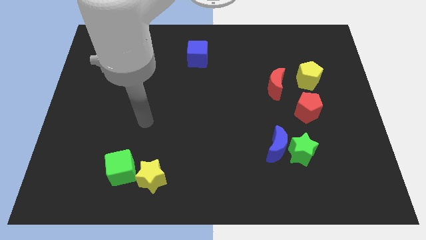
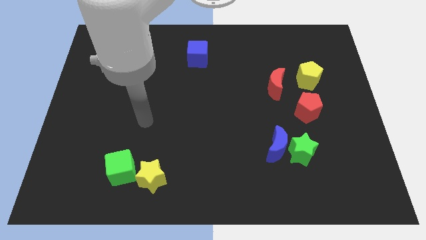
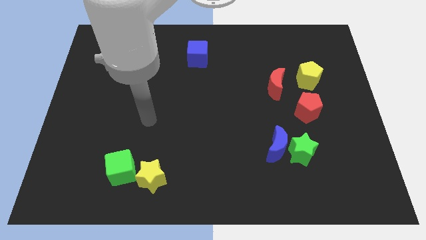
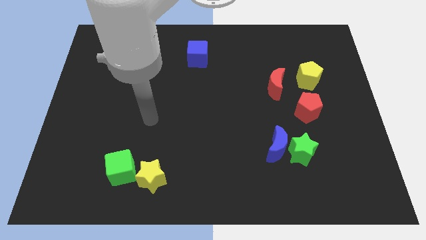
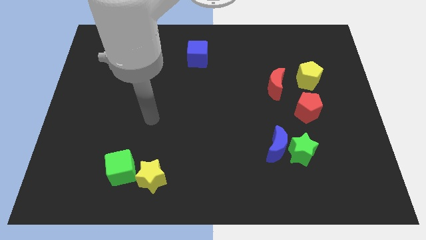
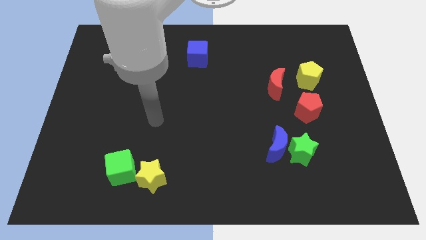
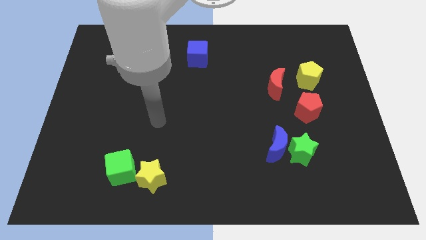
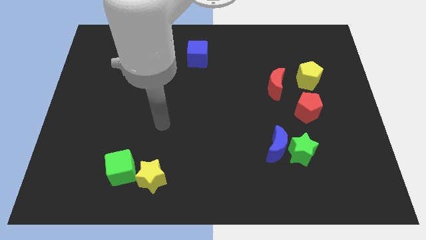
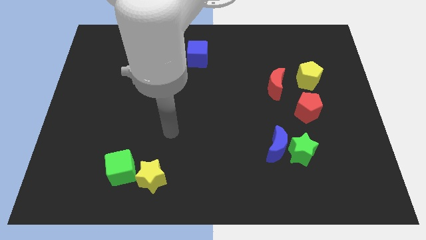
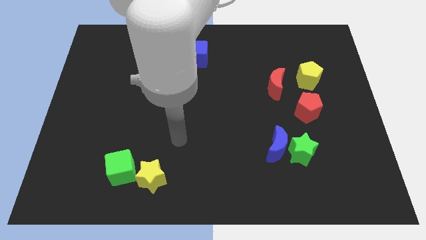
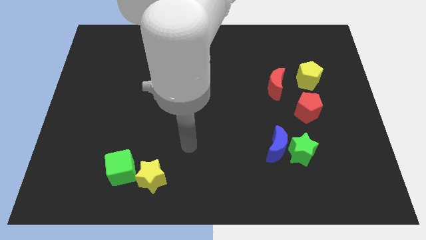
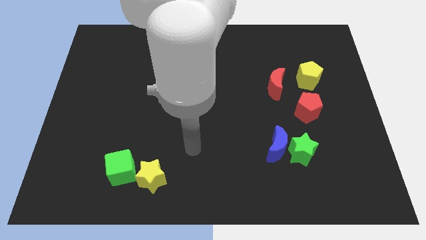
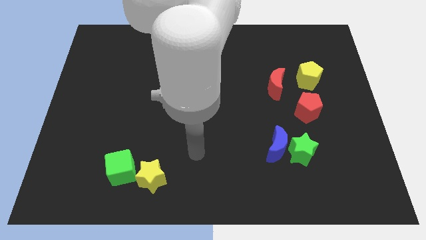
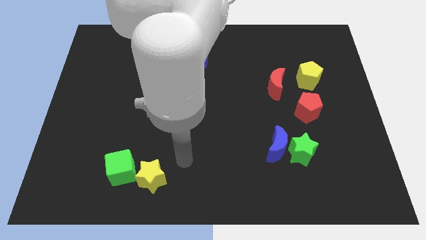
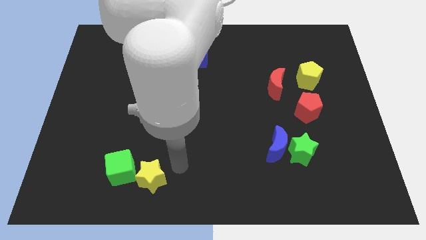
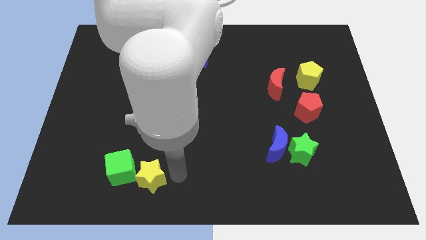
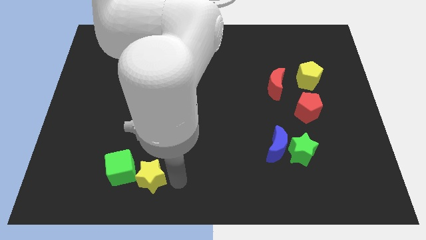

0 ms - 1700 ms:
move your hand to the left of the yellow star

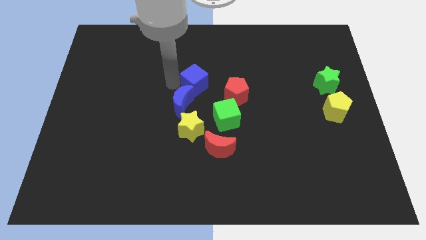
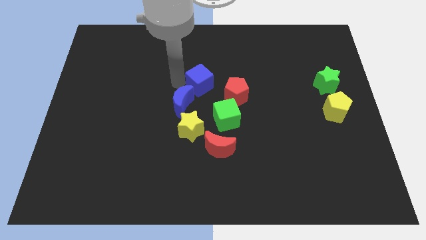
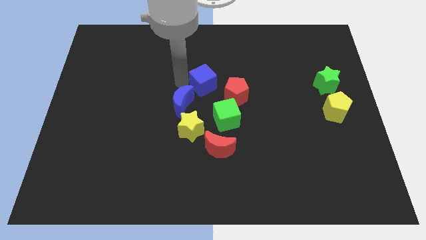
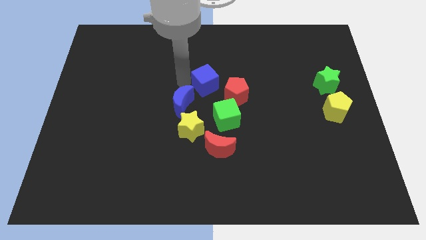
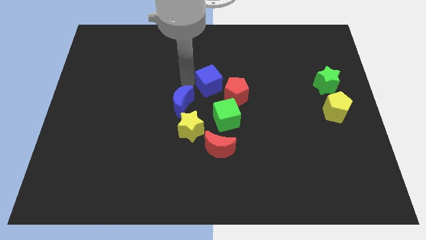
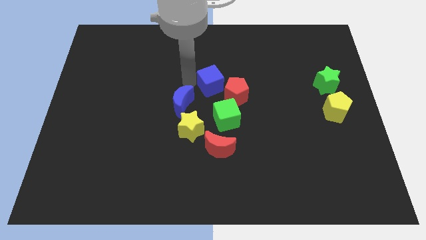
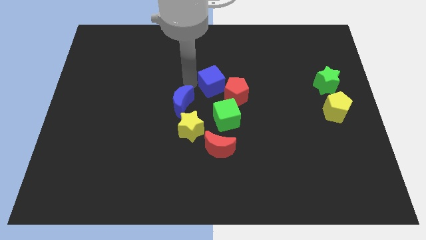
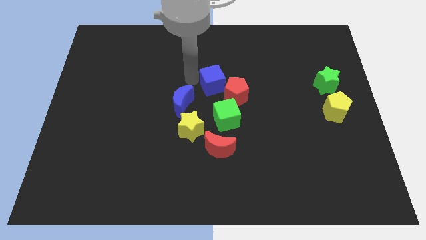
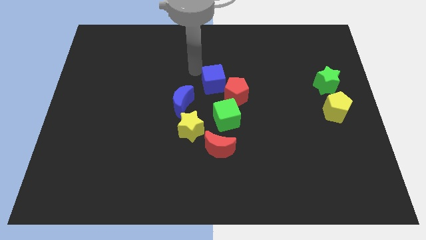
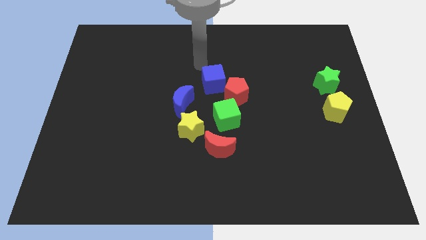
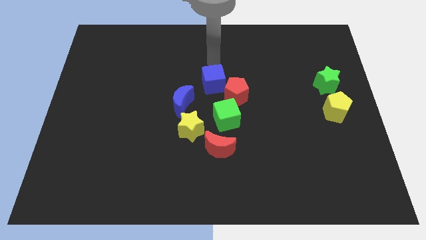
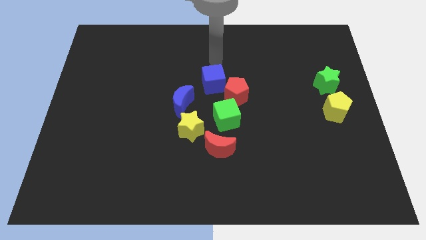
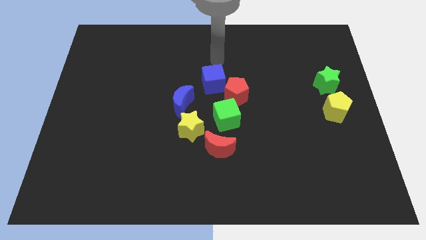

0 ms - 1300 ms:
push the blue cube above the red pentagon

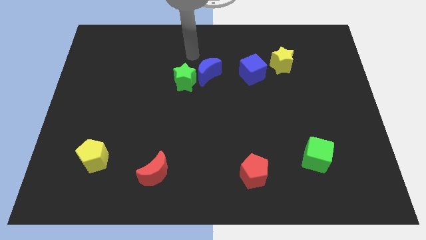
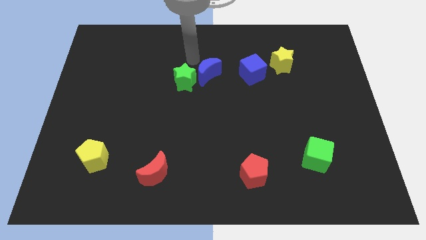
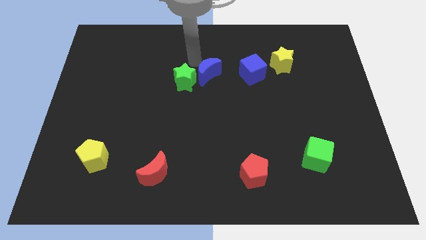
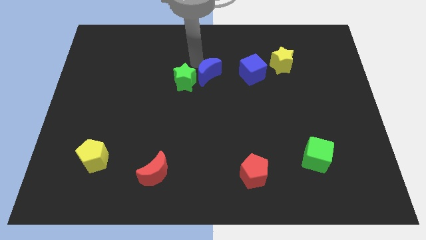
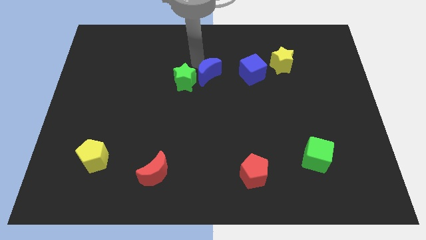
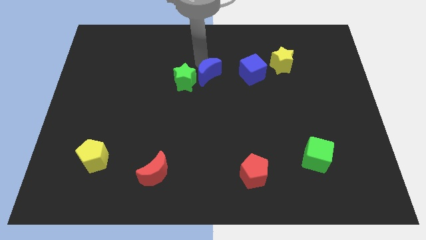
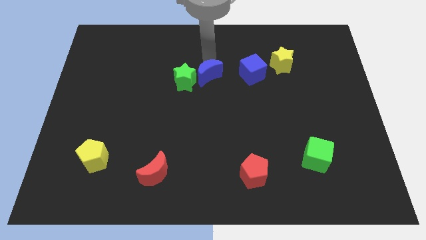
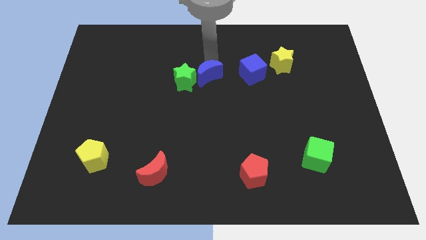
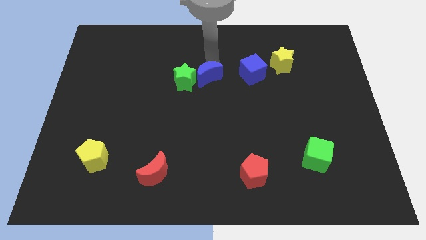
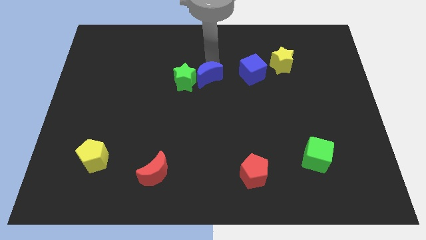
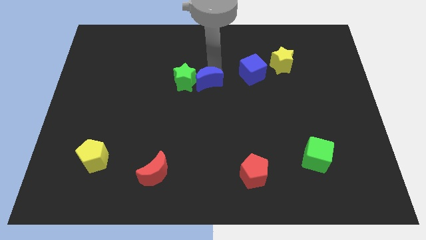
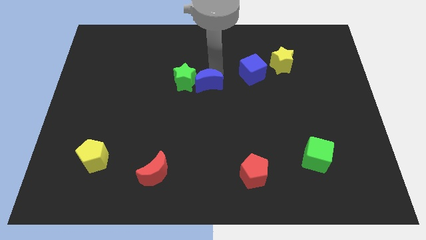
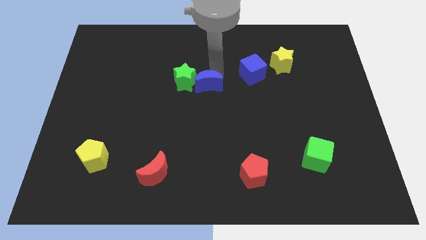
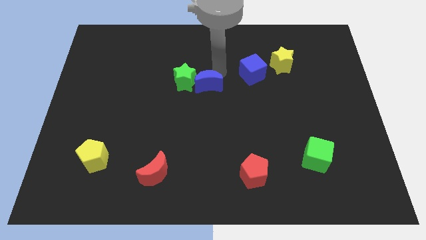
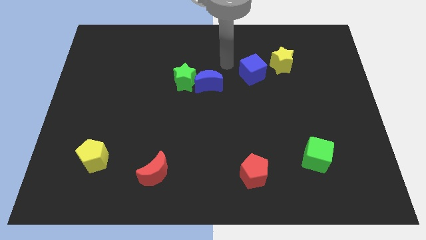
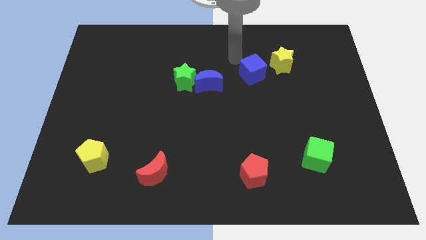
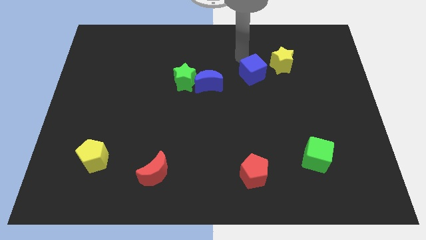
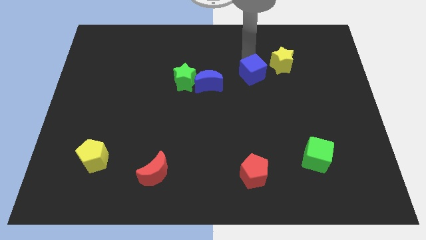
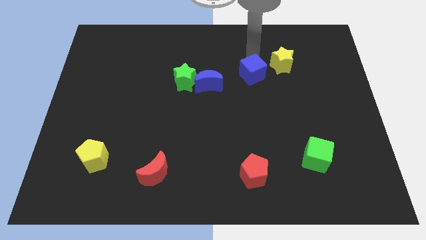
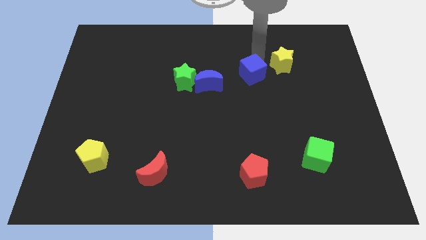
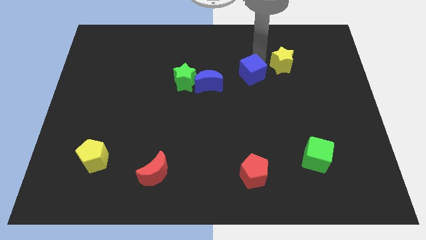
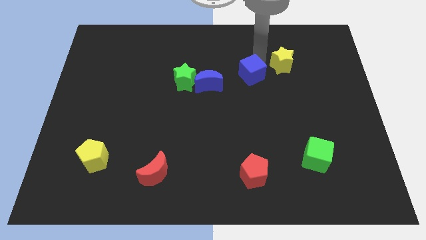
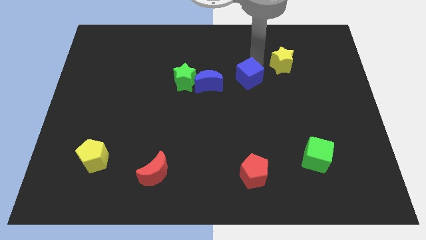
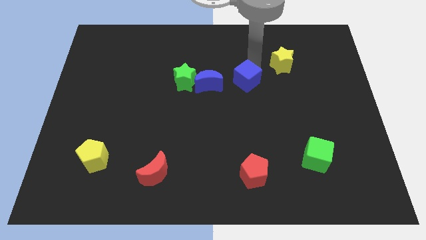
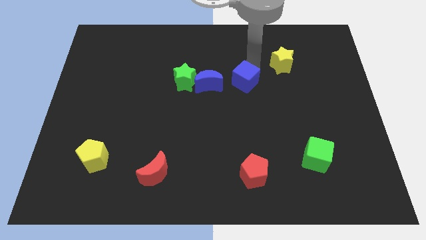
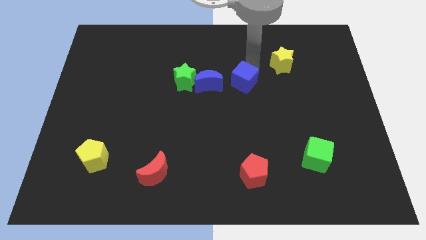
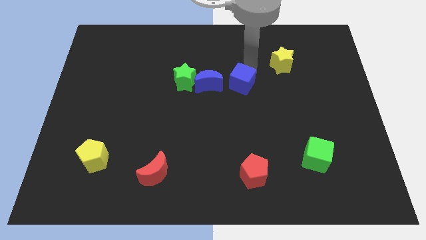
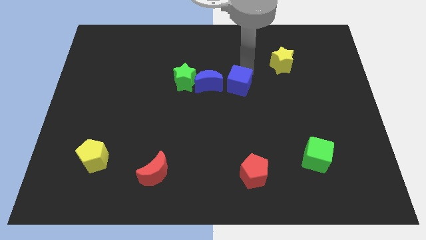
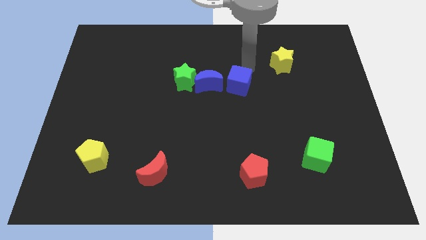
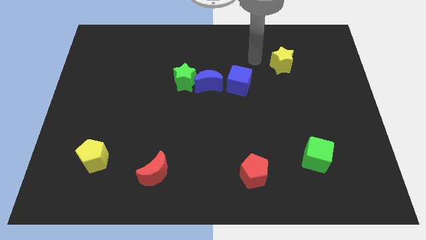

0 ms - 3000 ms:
push blue cube beside blue crescent

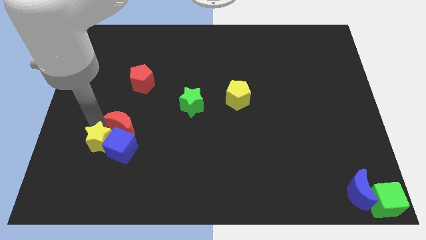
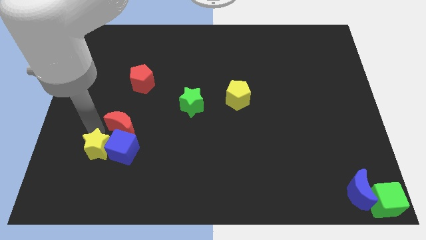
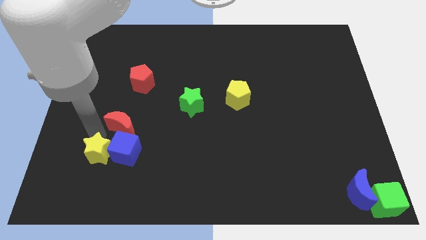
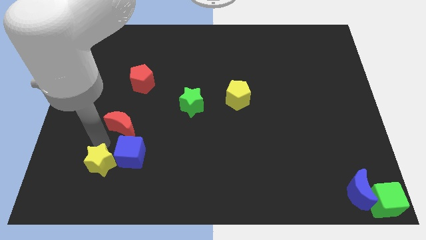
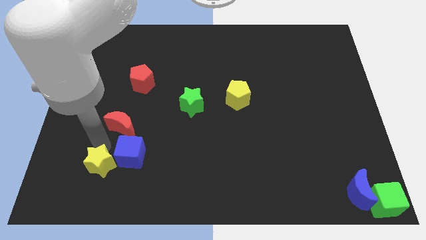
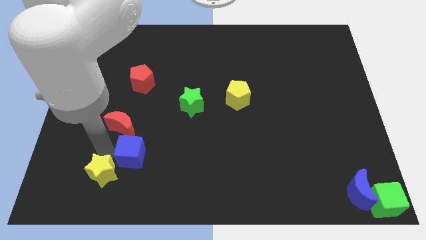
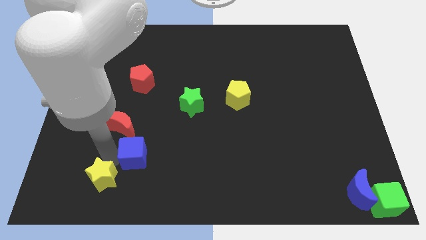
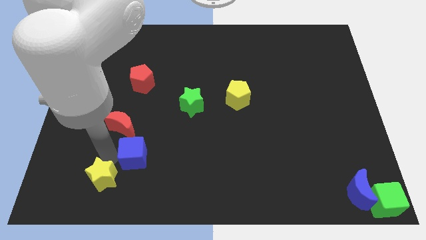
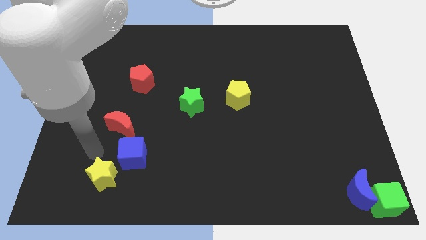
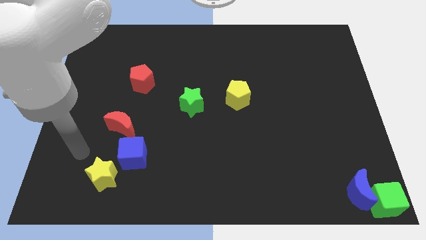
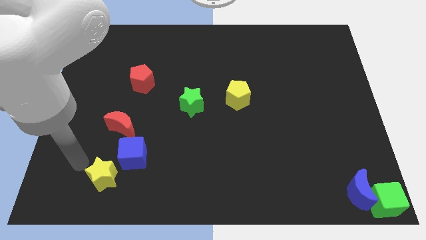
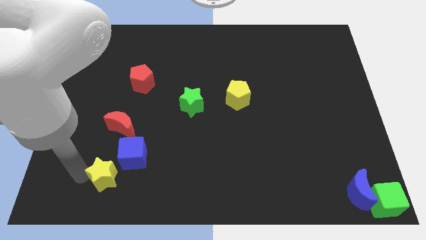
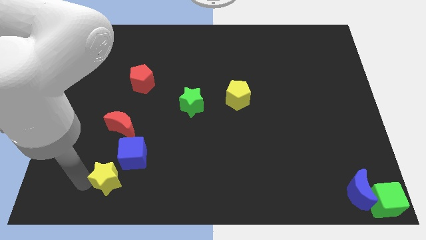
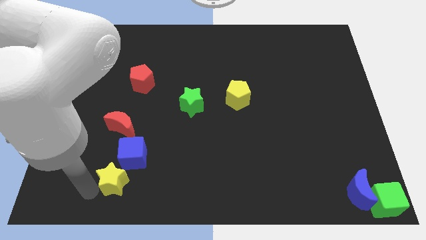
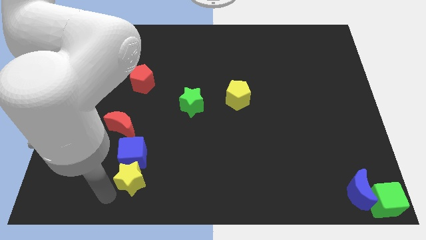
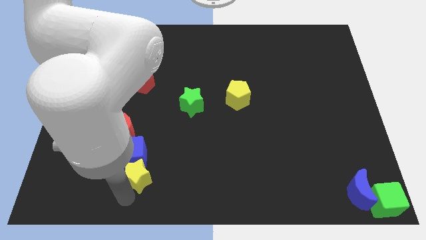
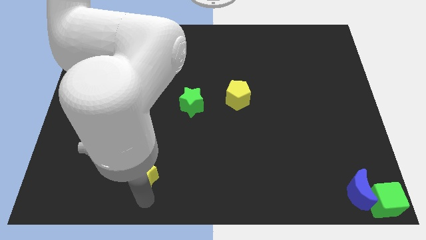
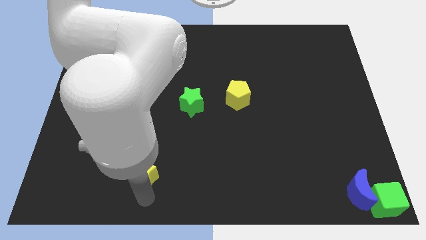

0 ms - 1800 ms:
push yellow star to bottom of the board

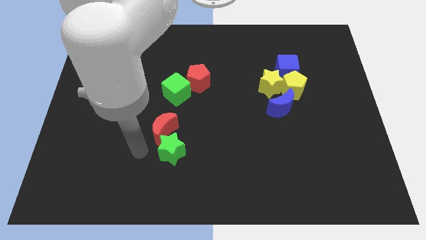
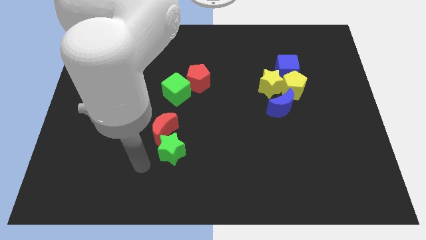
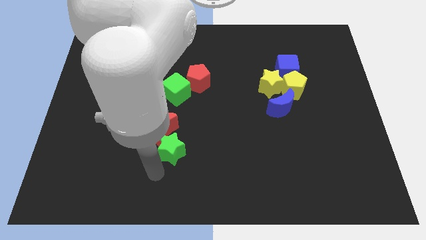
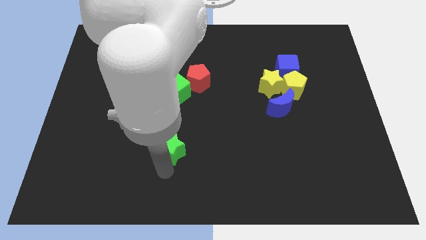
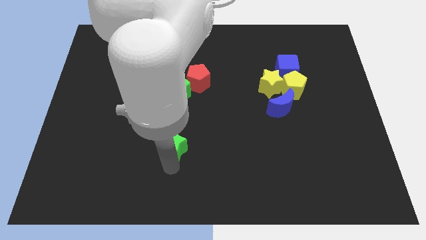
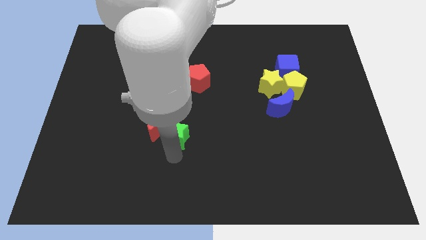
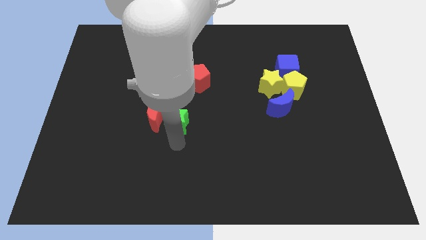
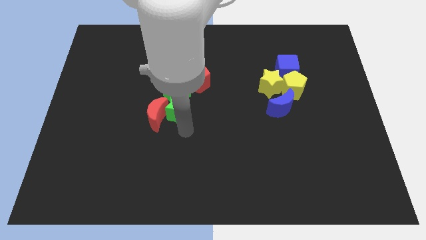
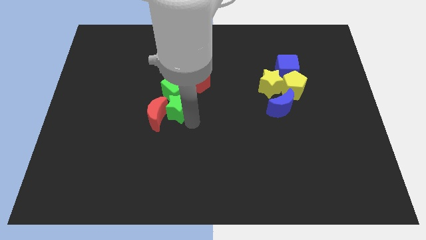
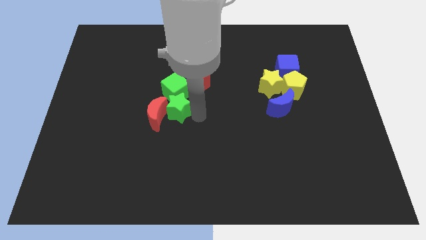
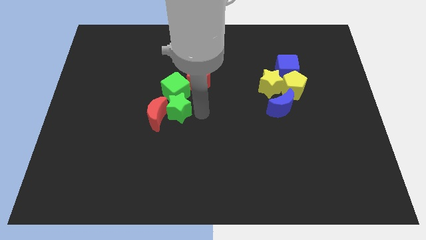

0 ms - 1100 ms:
put the green star at the bottom of the green cube

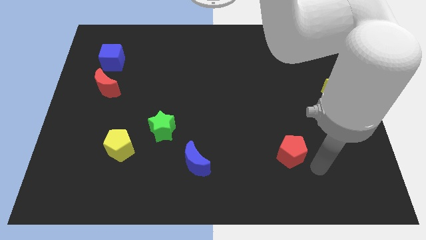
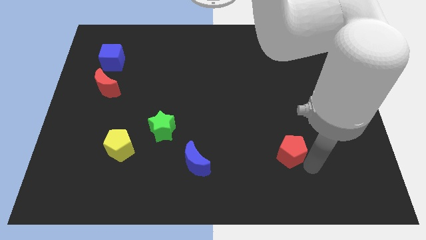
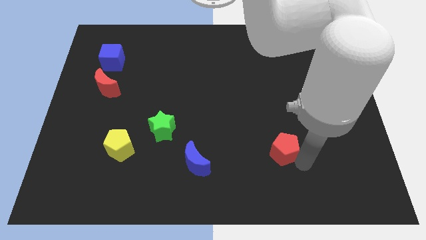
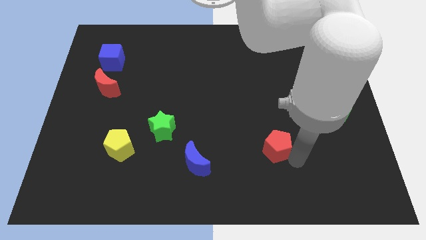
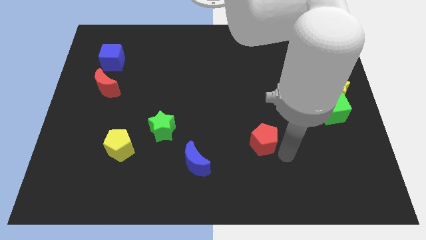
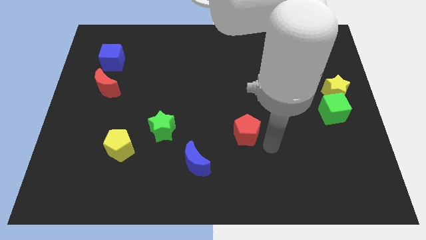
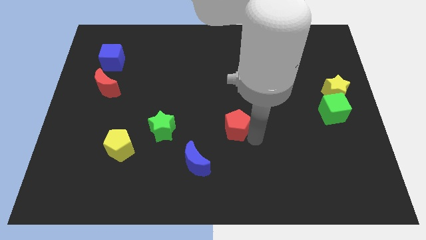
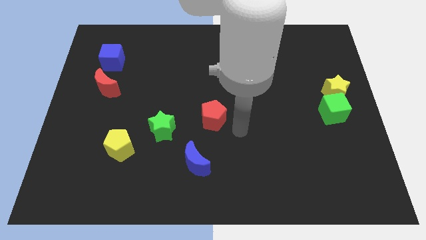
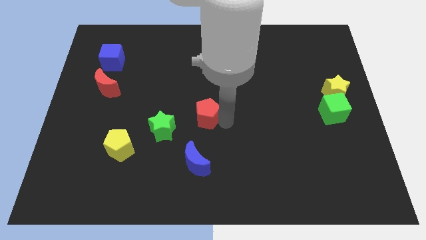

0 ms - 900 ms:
push the red pentagon towards the center of the board
